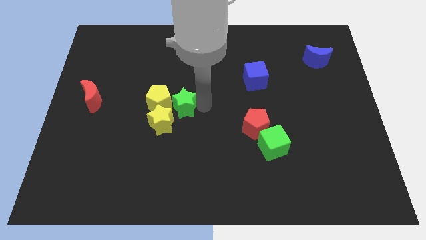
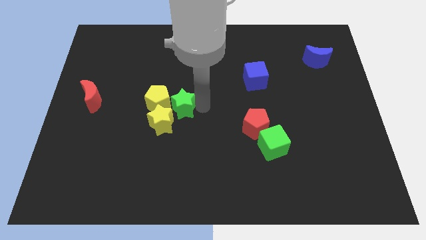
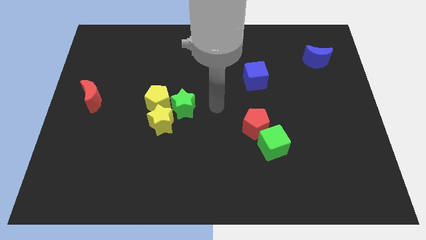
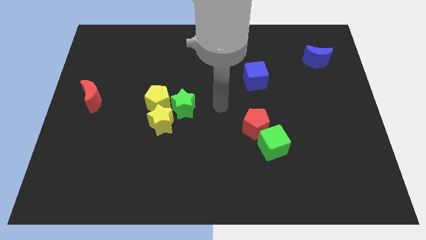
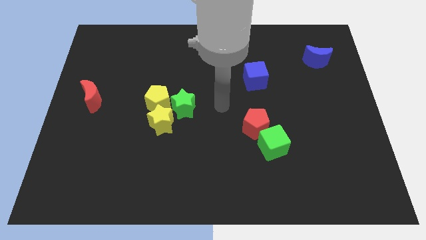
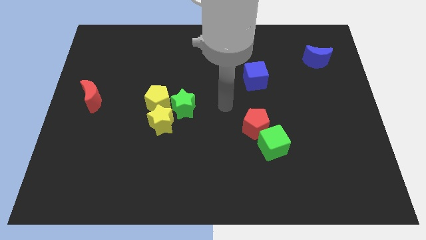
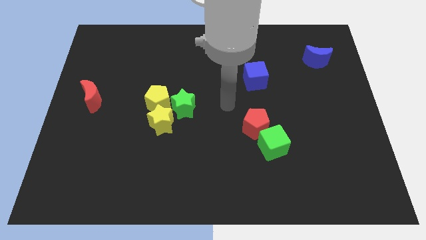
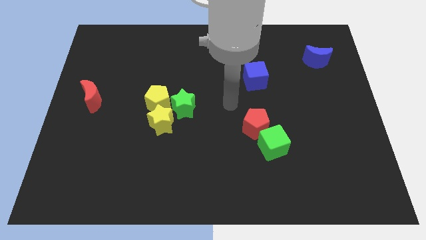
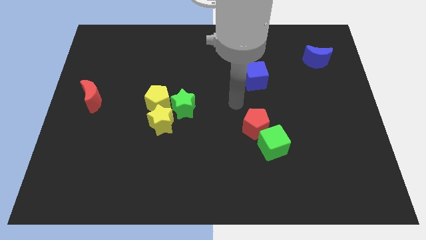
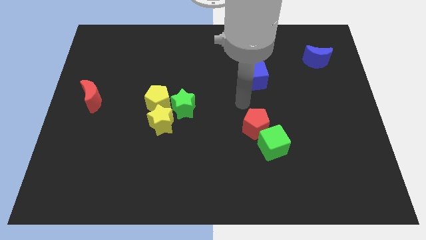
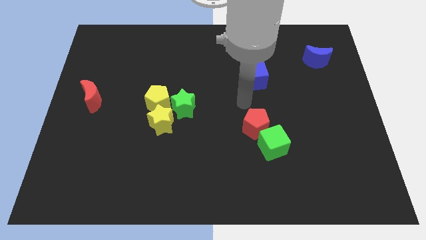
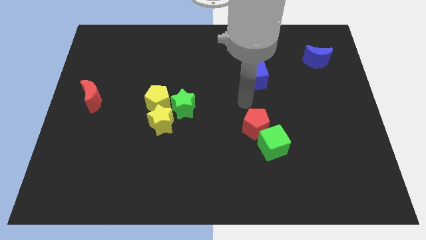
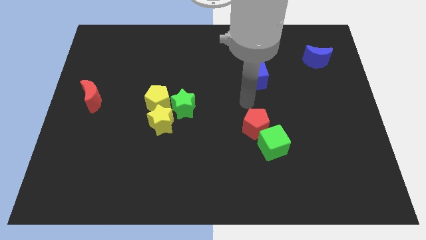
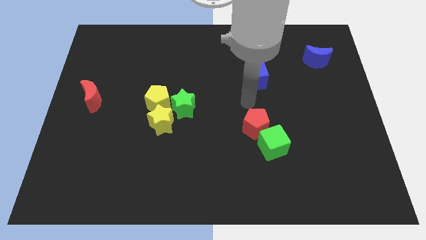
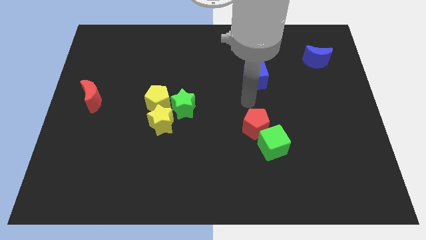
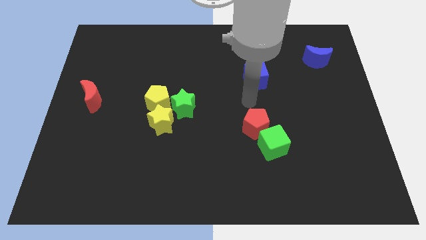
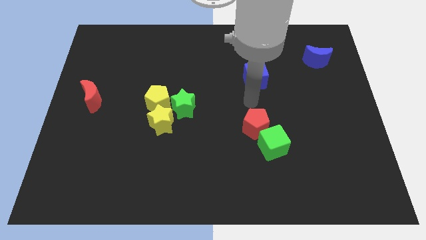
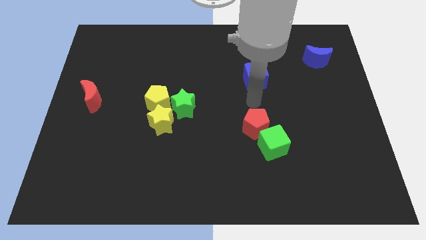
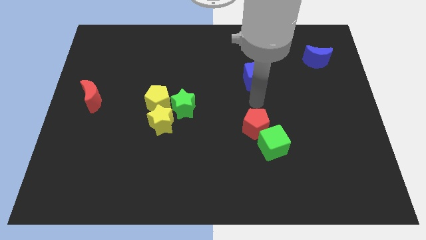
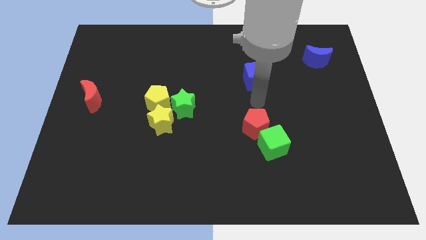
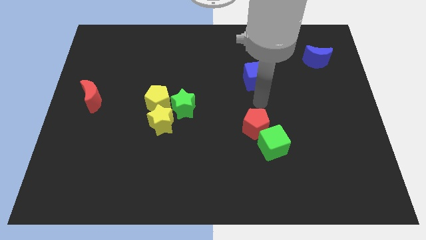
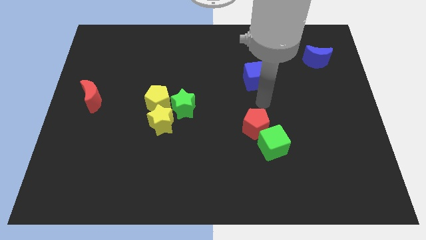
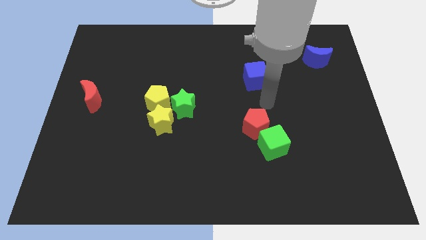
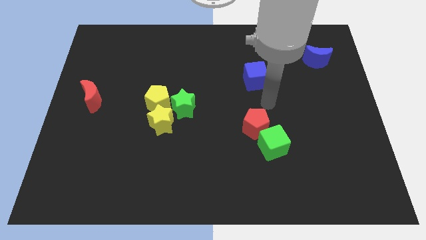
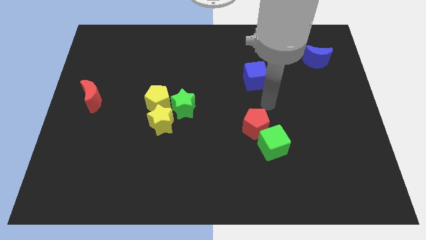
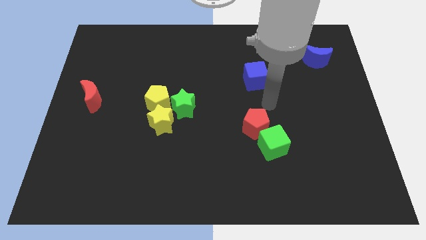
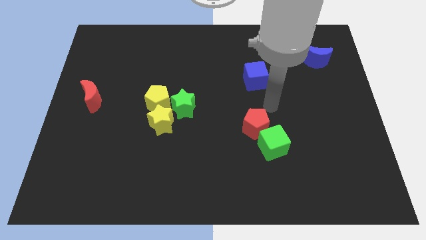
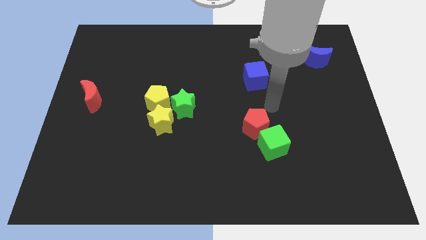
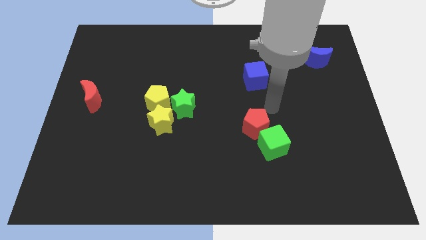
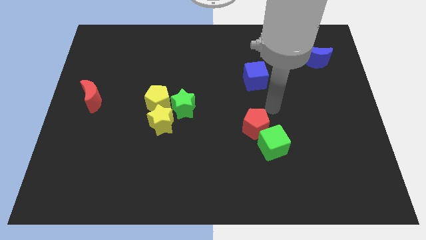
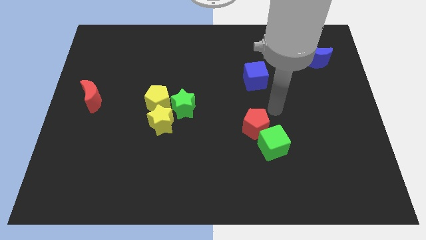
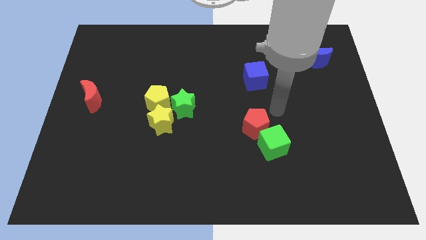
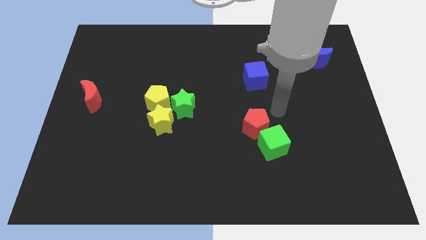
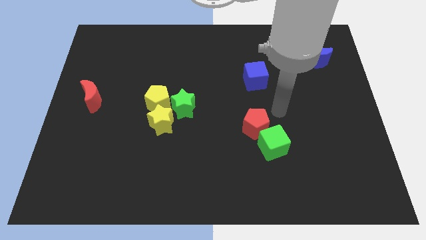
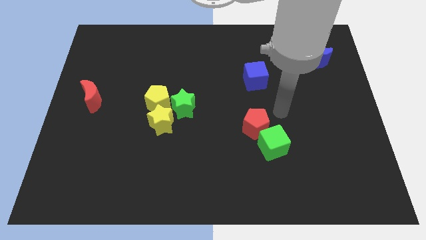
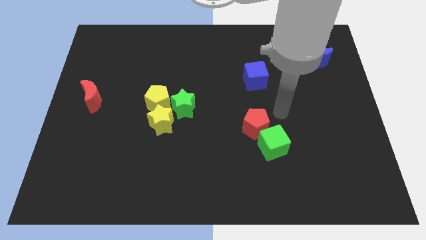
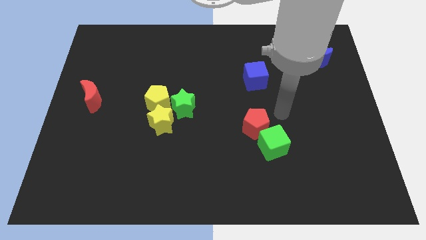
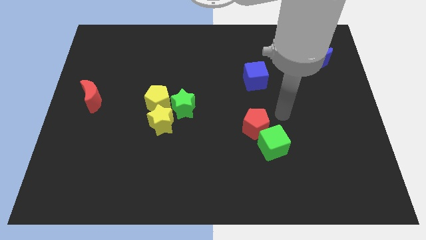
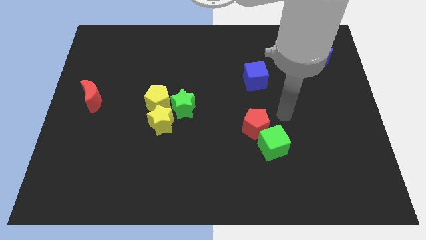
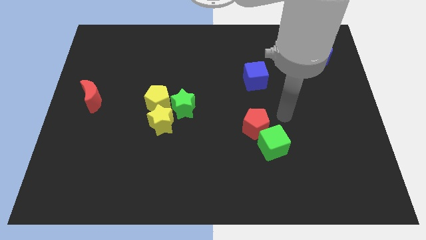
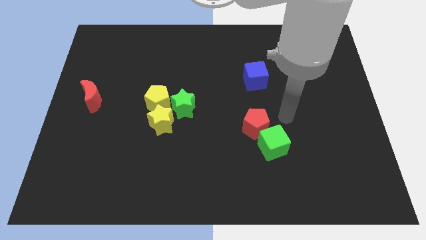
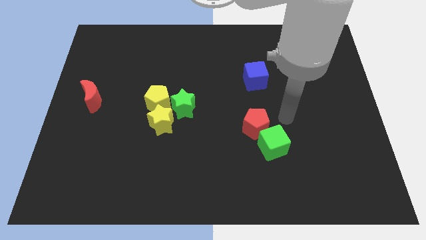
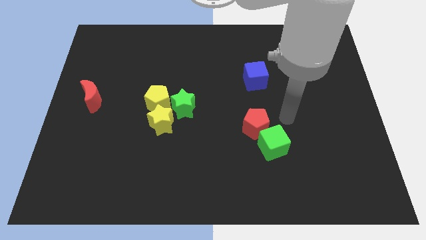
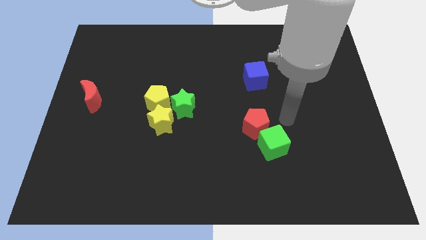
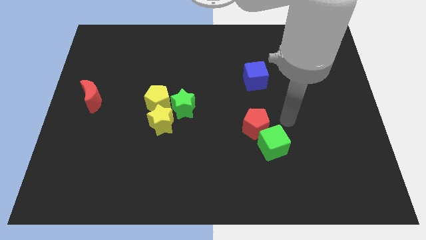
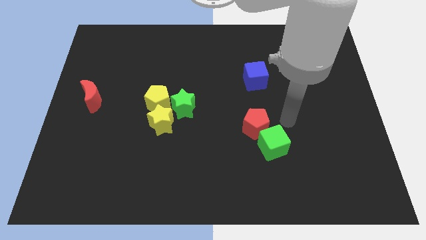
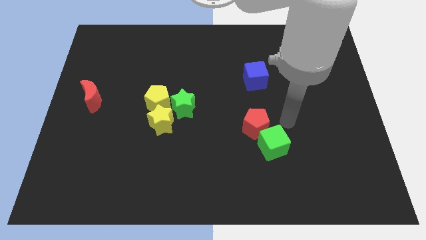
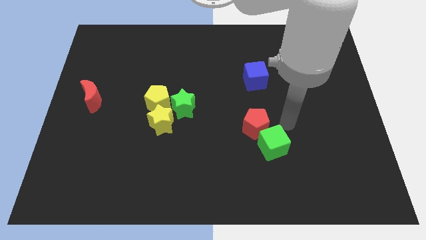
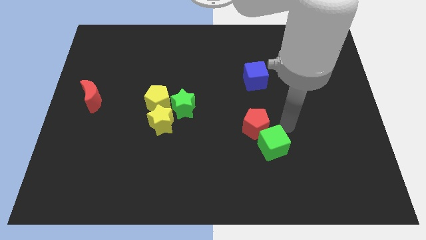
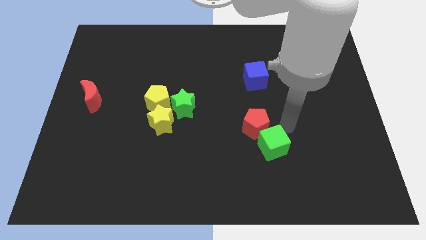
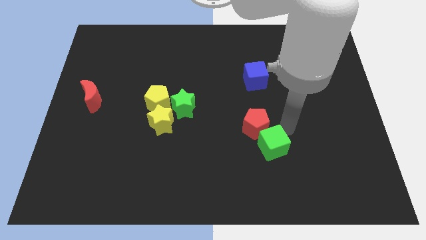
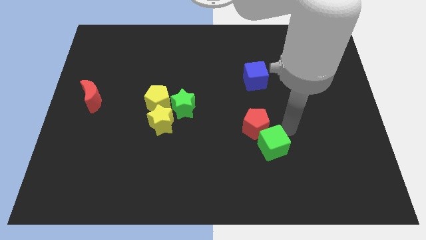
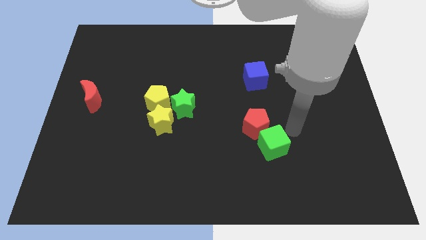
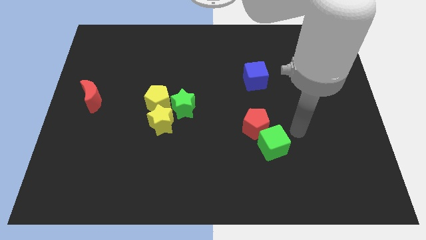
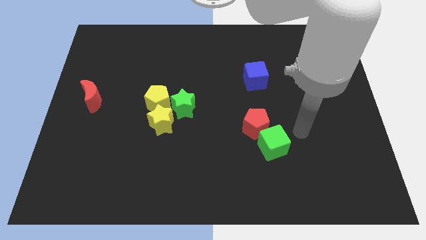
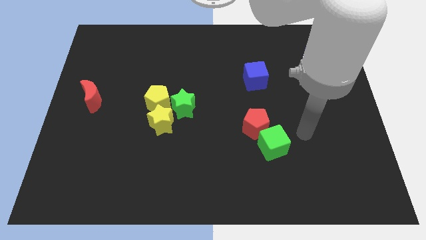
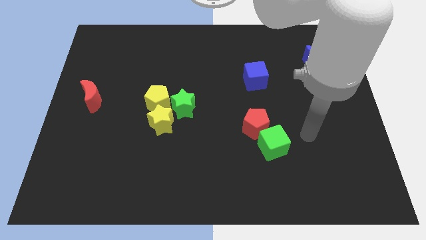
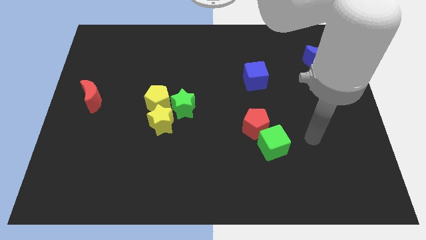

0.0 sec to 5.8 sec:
point your arm at the right of the green cube

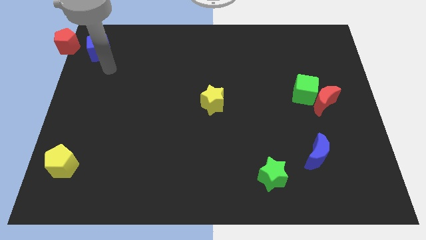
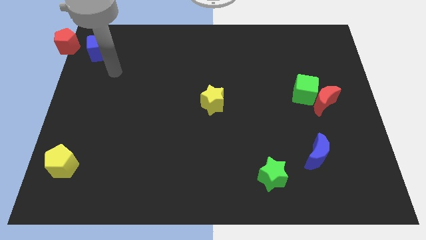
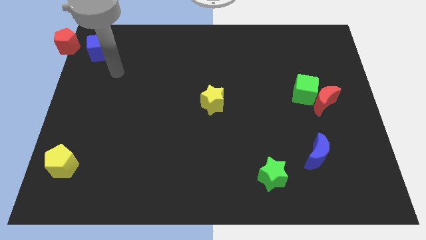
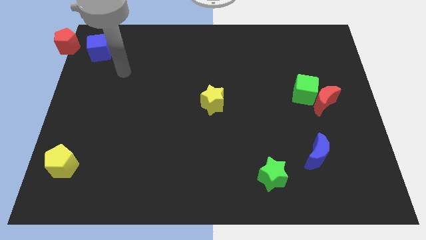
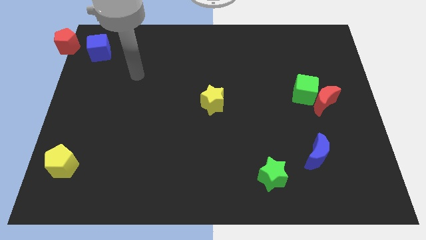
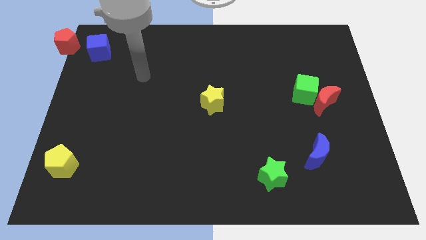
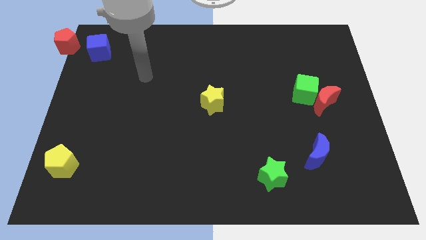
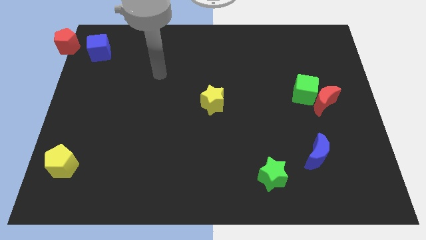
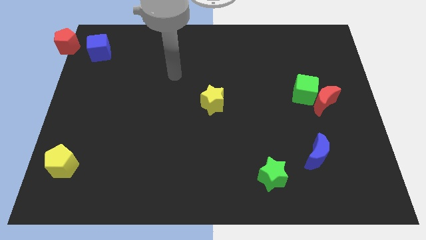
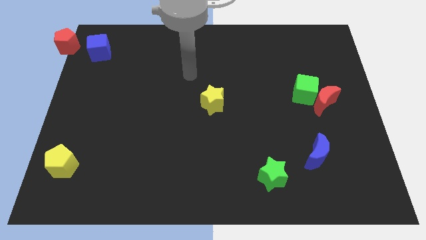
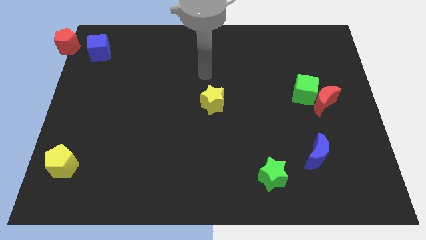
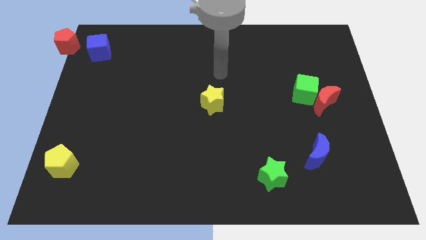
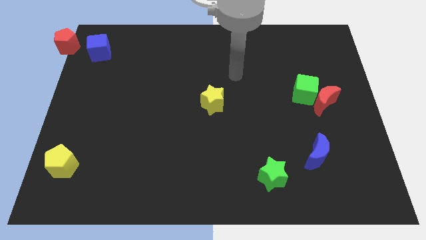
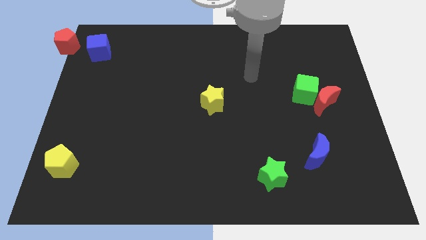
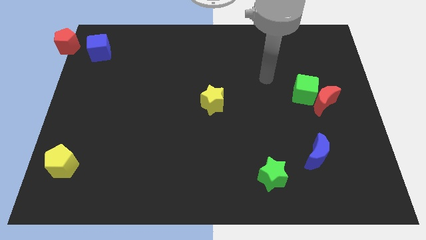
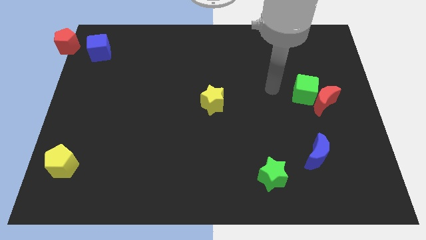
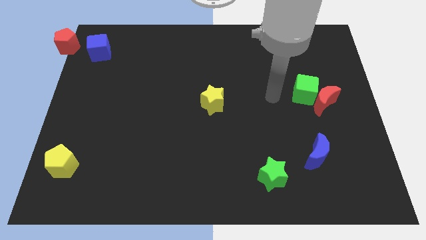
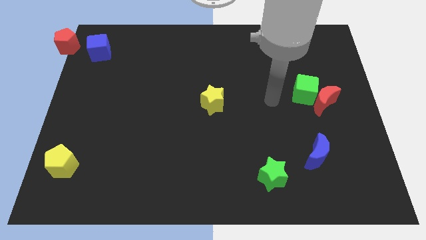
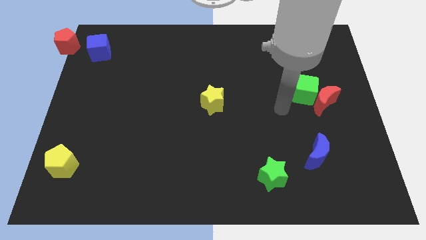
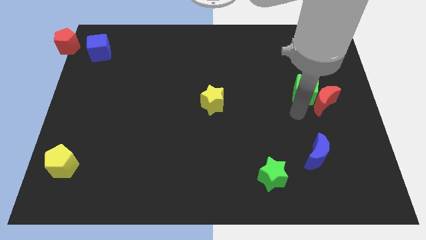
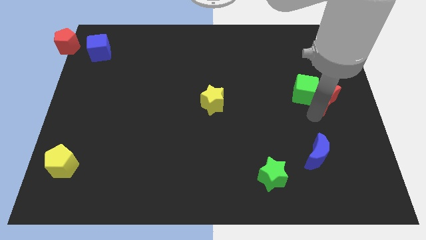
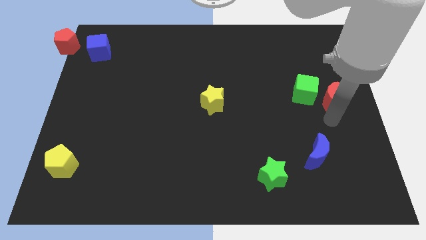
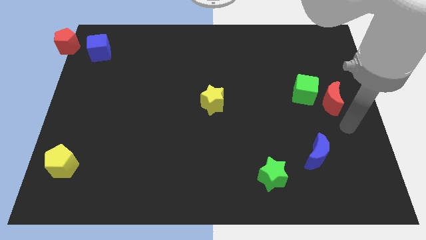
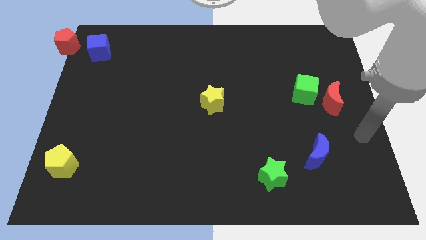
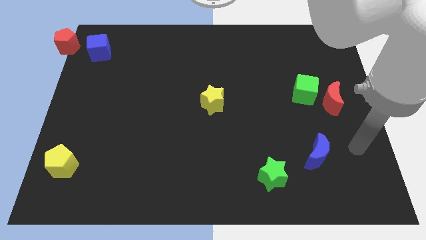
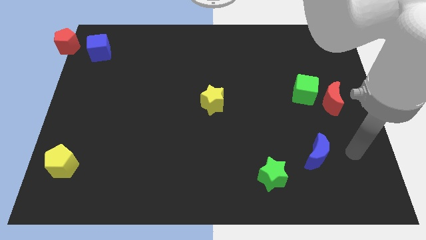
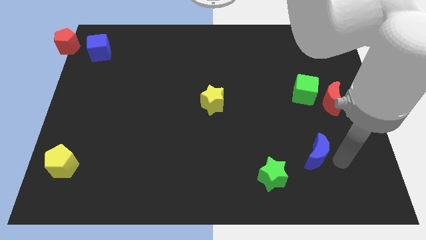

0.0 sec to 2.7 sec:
move your arm to the right of the blue moon

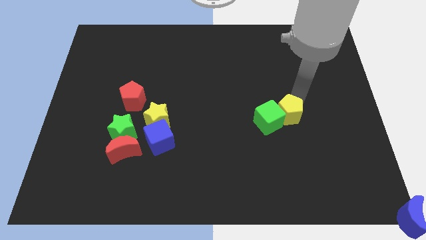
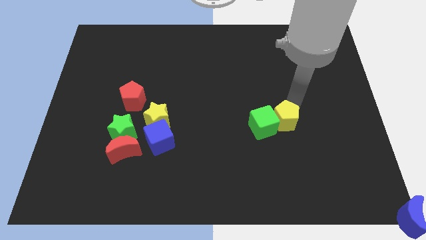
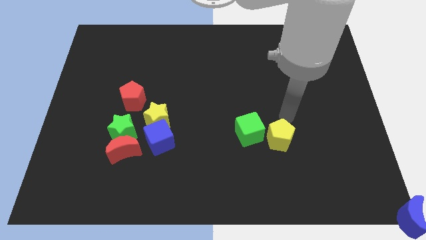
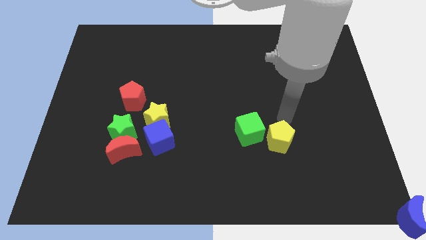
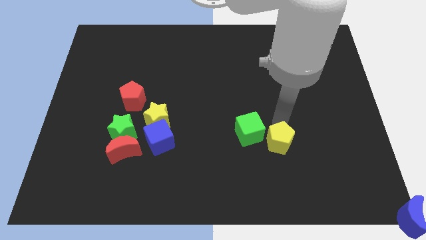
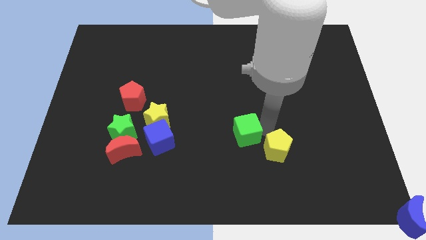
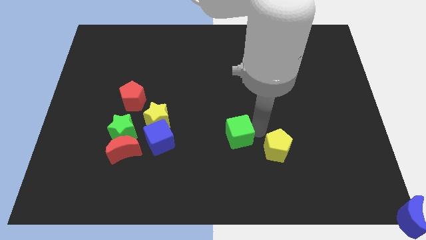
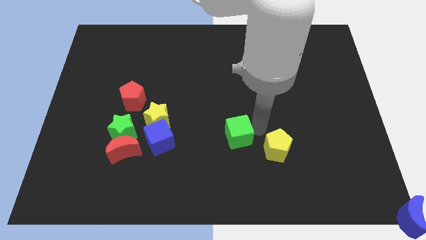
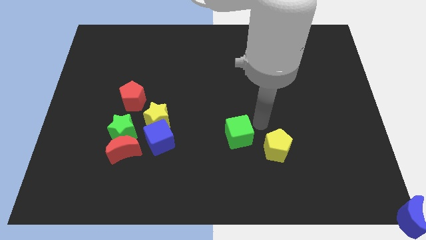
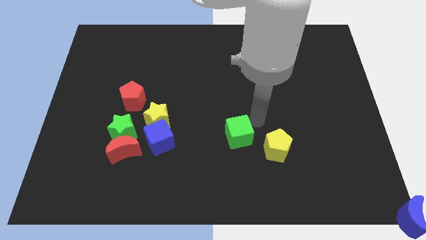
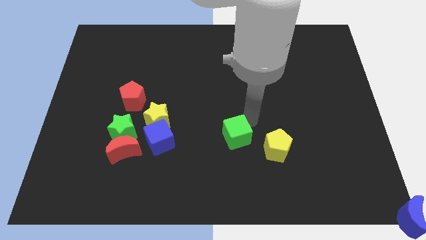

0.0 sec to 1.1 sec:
separate the green cube from yellow pentagon
